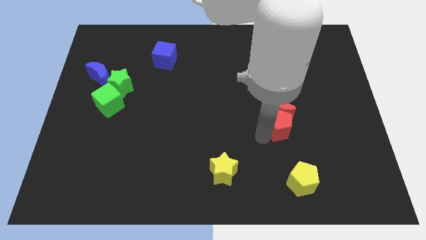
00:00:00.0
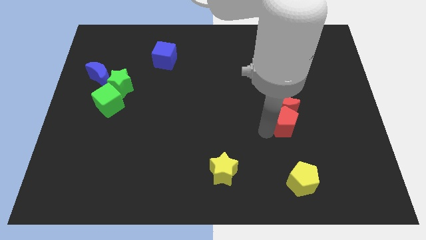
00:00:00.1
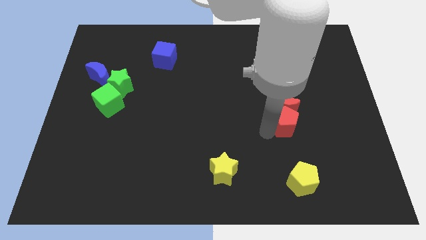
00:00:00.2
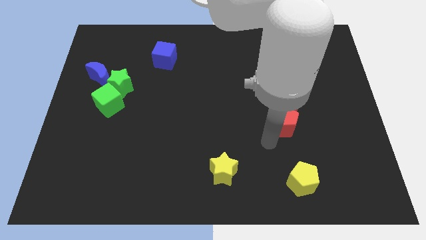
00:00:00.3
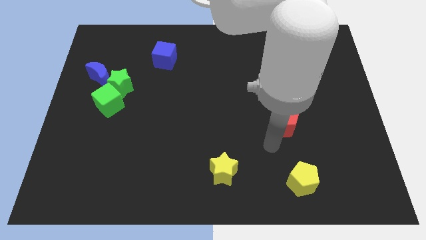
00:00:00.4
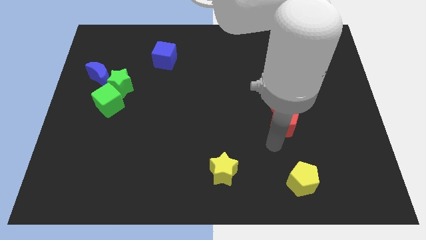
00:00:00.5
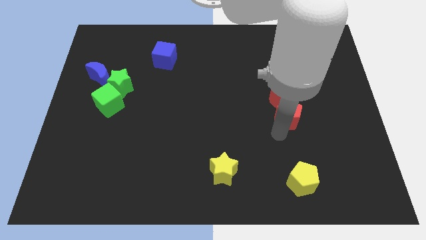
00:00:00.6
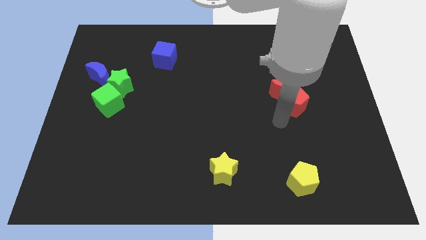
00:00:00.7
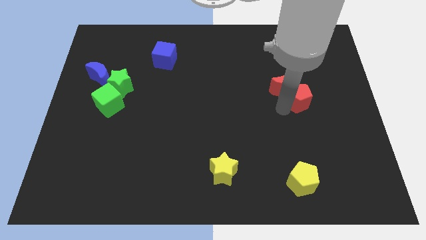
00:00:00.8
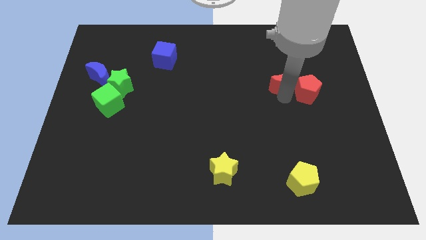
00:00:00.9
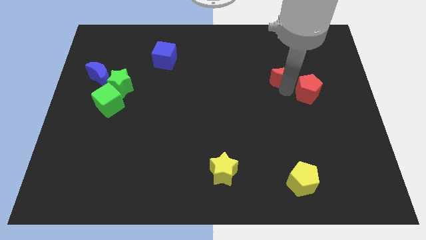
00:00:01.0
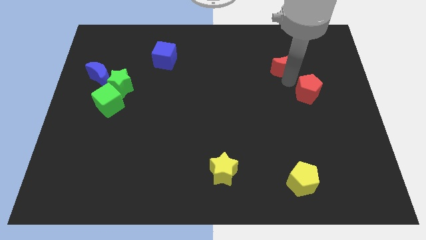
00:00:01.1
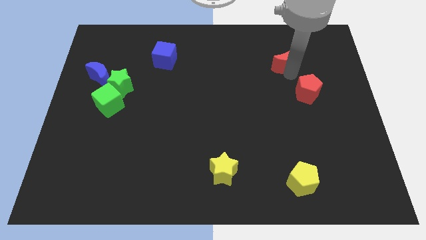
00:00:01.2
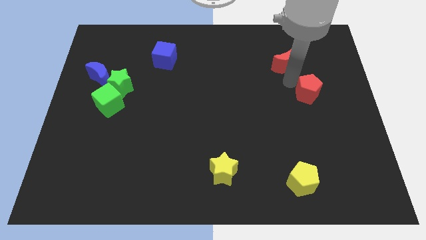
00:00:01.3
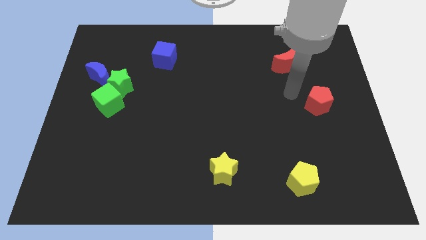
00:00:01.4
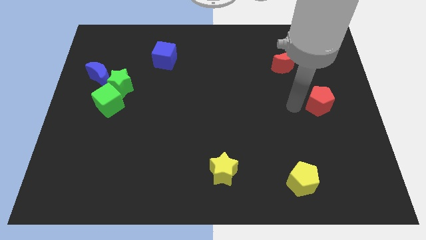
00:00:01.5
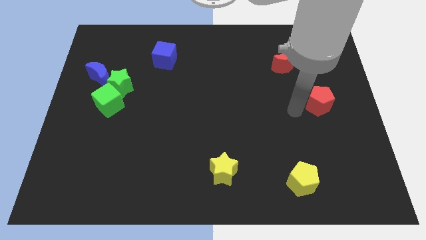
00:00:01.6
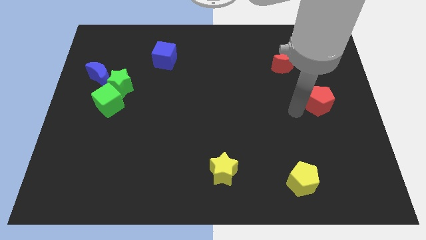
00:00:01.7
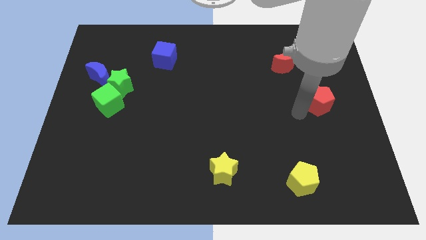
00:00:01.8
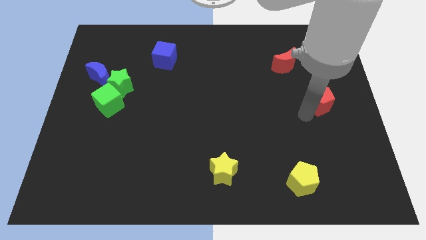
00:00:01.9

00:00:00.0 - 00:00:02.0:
separate the red blocks

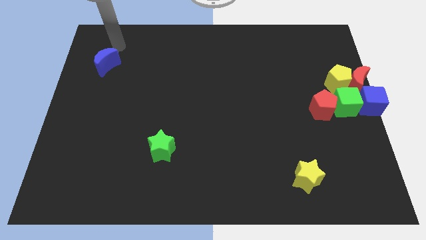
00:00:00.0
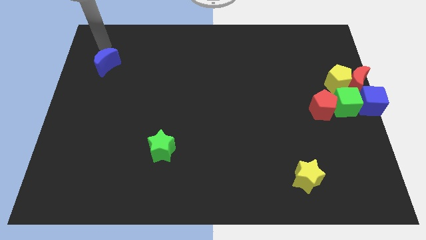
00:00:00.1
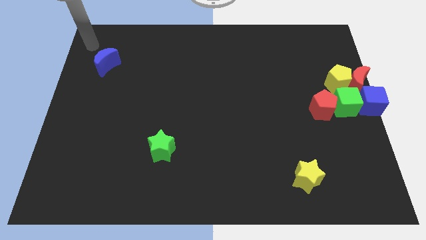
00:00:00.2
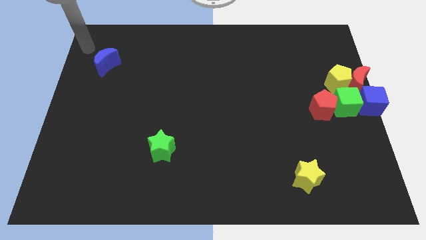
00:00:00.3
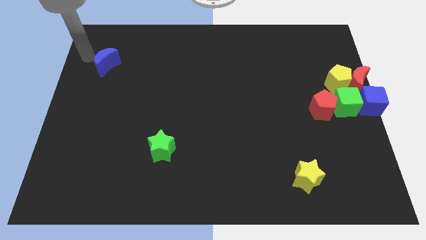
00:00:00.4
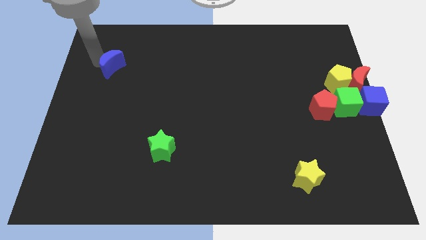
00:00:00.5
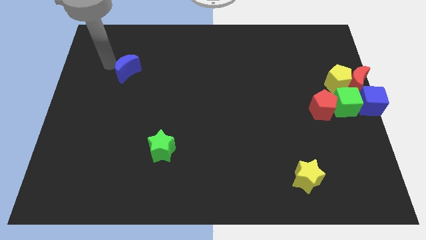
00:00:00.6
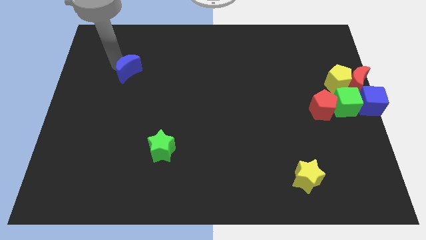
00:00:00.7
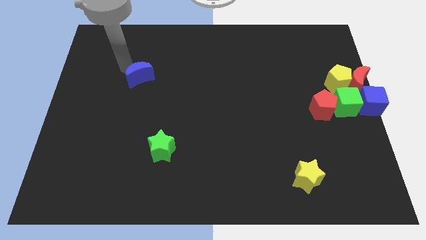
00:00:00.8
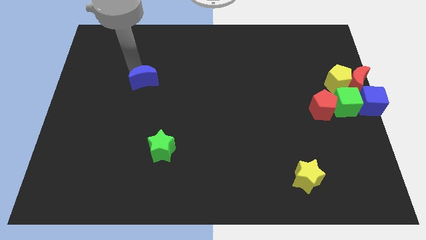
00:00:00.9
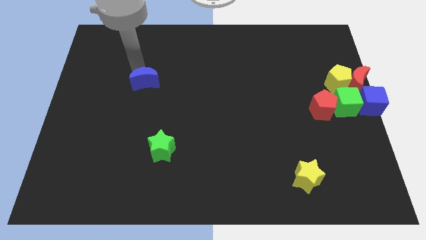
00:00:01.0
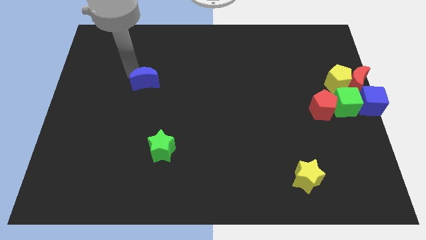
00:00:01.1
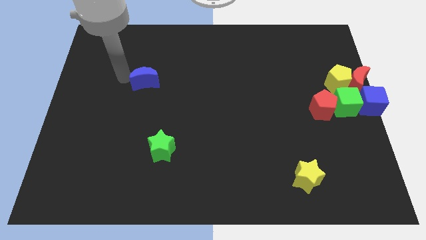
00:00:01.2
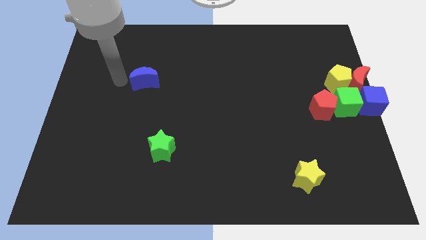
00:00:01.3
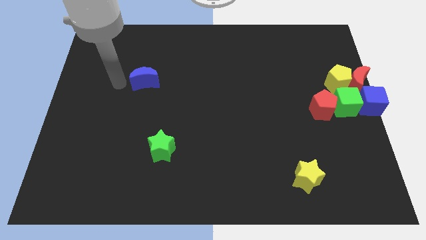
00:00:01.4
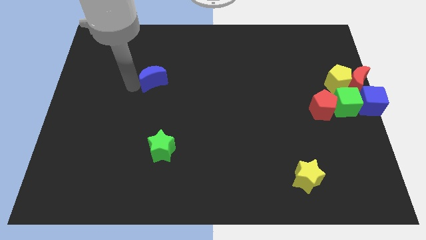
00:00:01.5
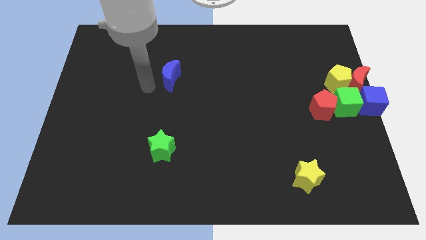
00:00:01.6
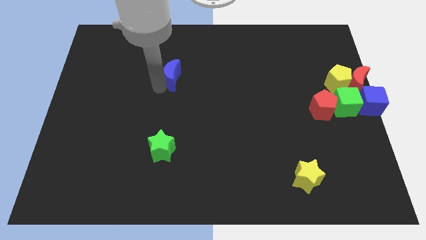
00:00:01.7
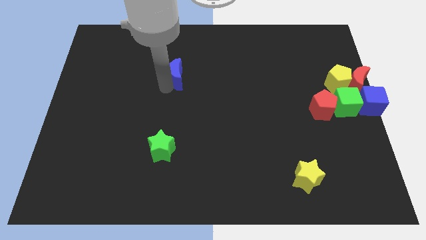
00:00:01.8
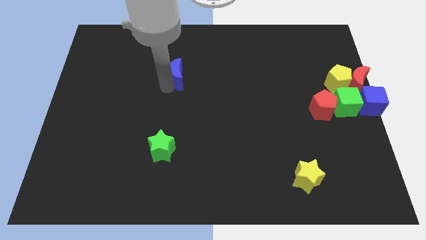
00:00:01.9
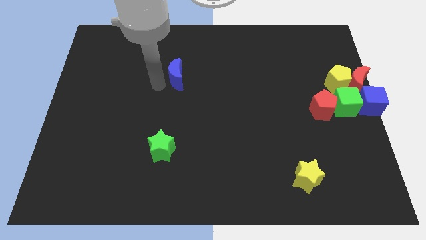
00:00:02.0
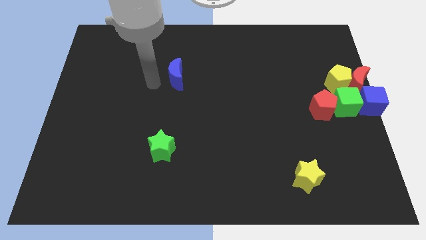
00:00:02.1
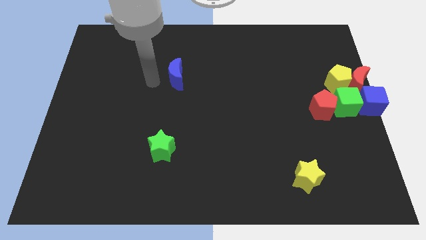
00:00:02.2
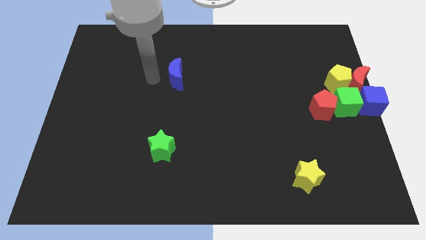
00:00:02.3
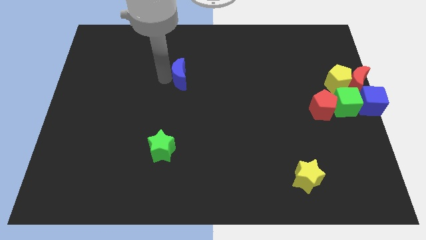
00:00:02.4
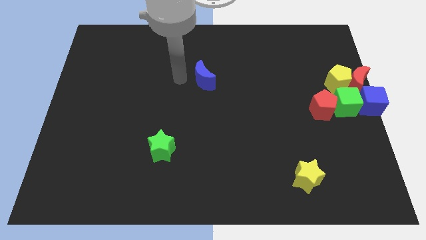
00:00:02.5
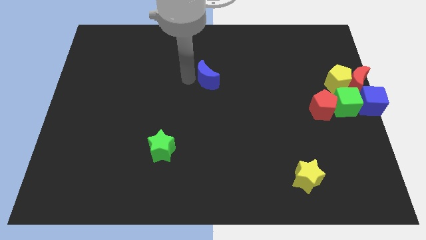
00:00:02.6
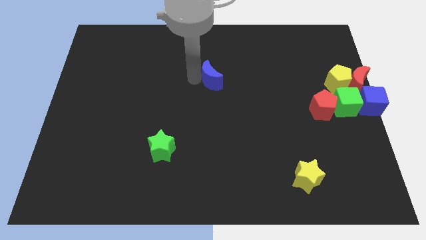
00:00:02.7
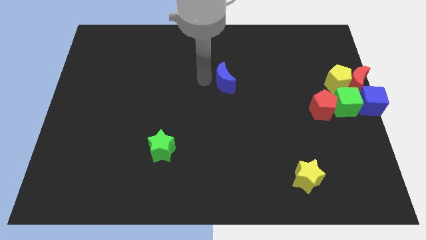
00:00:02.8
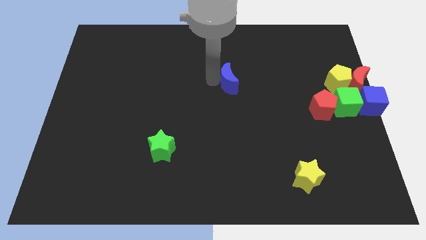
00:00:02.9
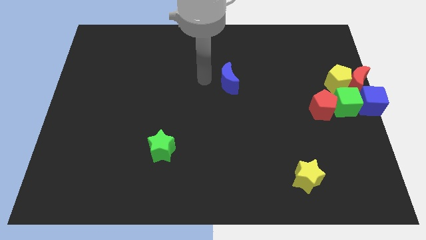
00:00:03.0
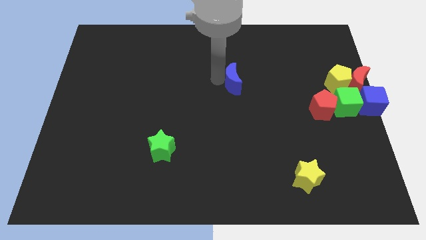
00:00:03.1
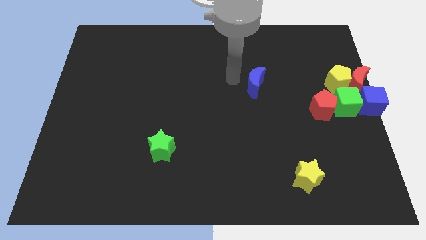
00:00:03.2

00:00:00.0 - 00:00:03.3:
slide blue moon towards right

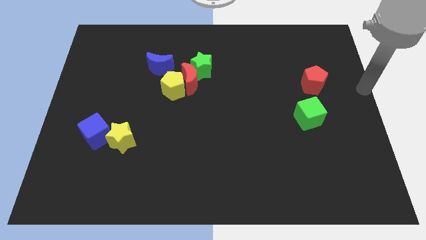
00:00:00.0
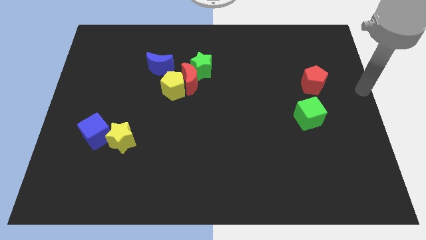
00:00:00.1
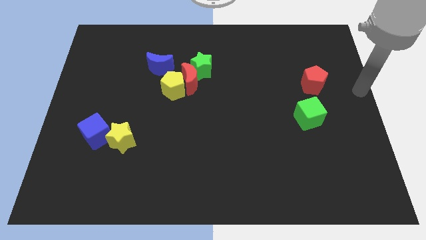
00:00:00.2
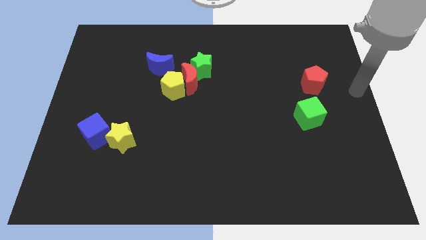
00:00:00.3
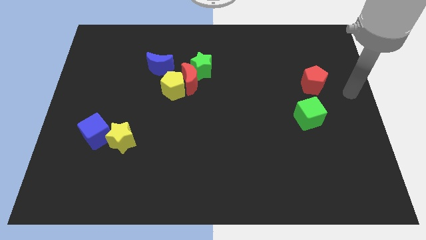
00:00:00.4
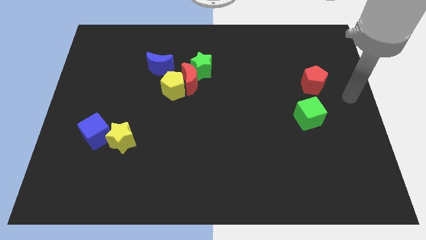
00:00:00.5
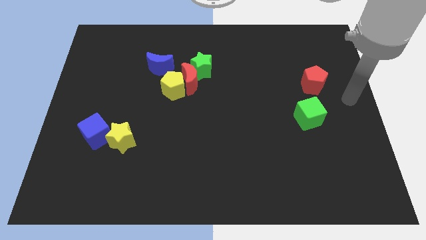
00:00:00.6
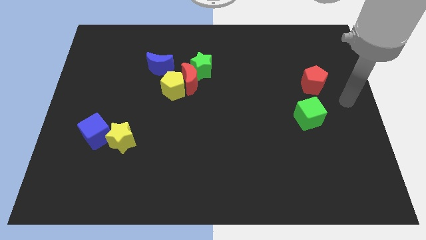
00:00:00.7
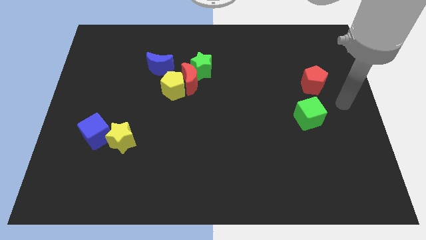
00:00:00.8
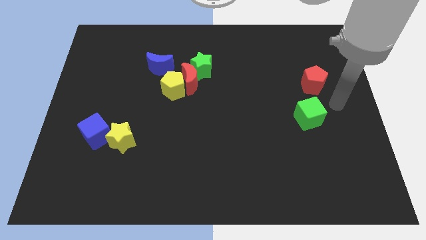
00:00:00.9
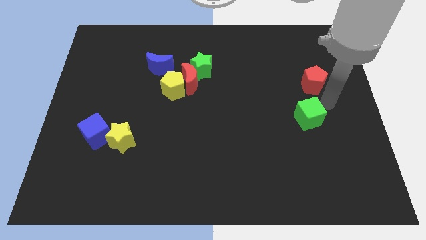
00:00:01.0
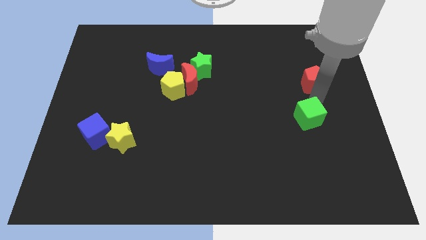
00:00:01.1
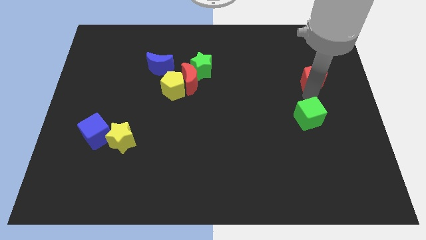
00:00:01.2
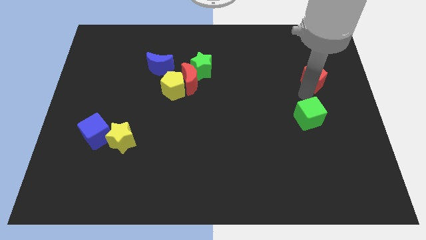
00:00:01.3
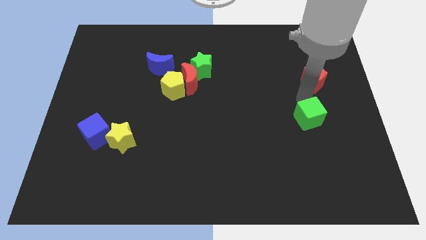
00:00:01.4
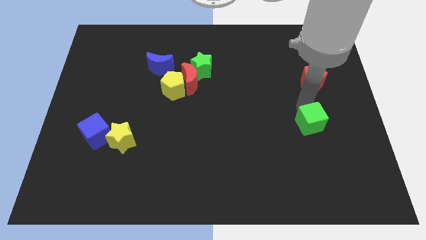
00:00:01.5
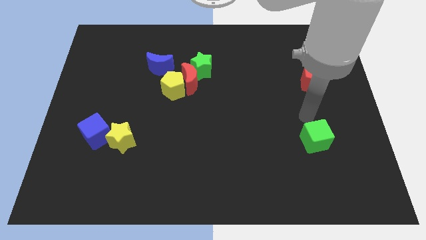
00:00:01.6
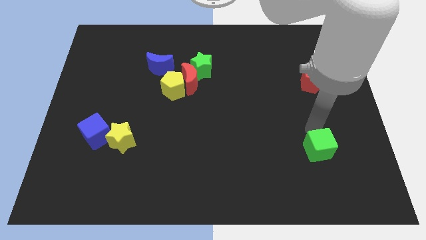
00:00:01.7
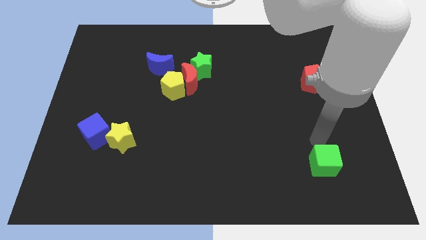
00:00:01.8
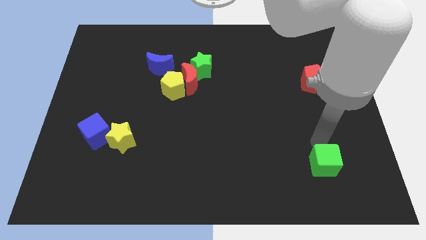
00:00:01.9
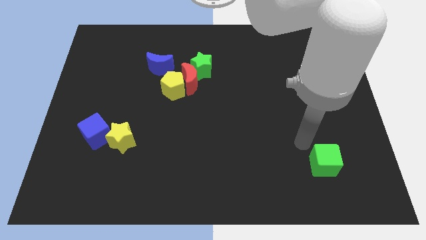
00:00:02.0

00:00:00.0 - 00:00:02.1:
move the green cube vertical to the bottom of the red pentagon

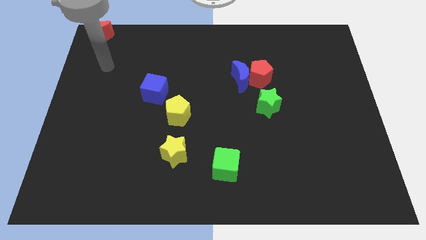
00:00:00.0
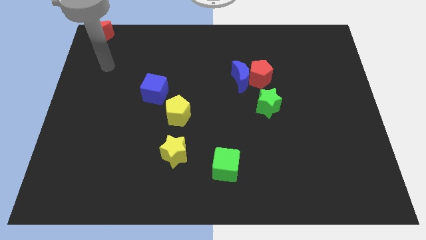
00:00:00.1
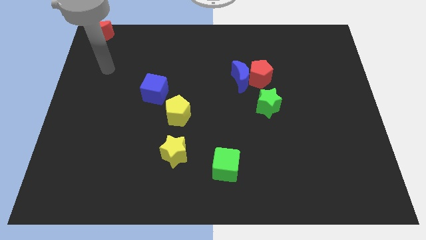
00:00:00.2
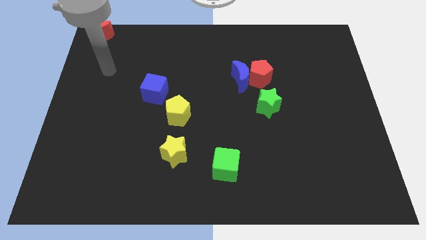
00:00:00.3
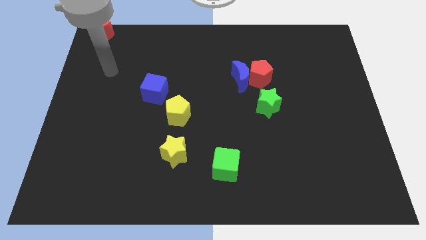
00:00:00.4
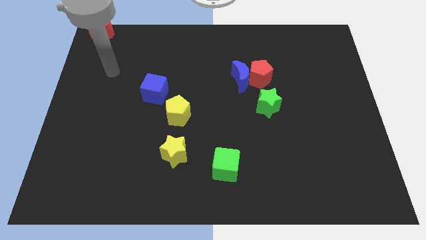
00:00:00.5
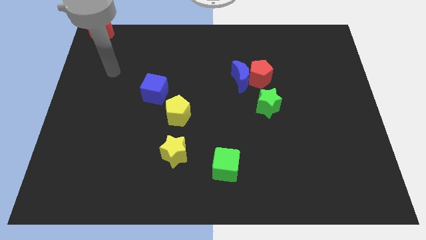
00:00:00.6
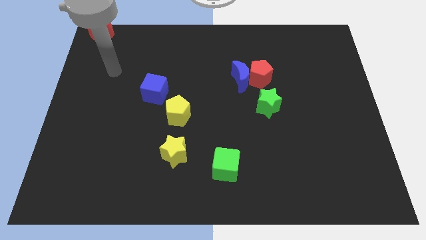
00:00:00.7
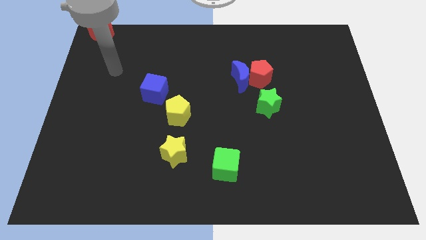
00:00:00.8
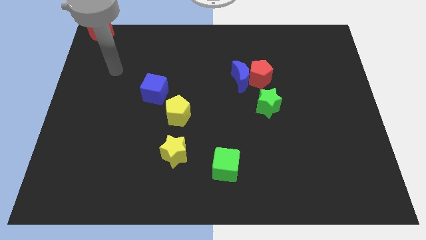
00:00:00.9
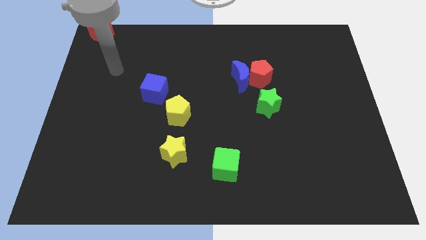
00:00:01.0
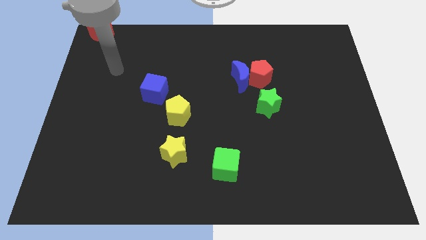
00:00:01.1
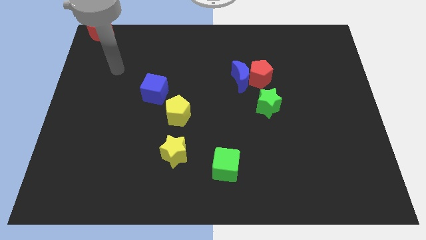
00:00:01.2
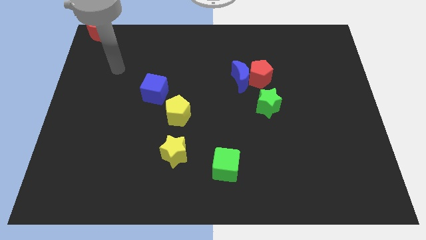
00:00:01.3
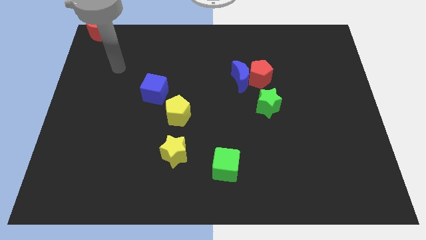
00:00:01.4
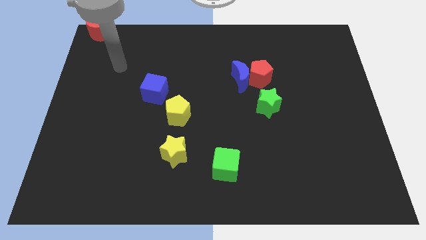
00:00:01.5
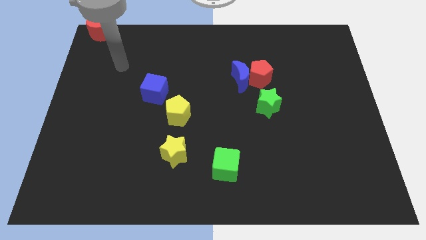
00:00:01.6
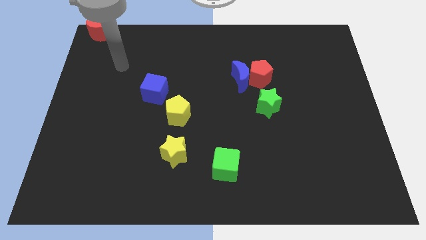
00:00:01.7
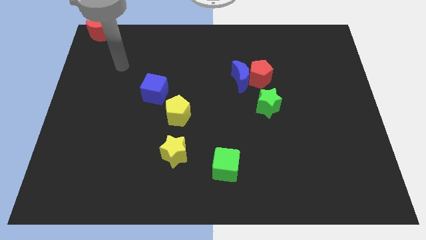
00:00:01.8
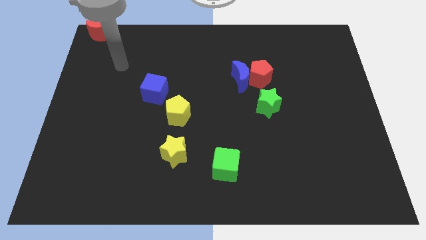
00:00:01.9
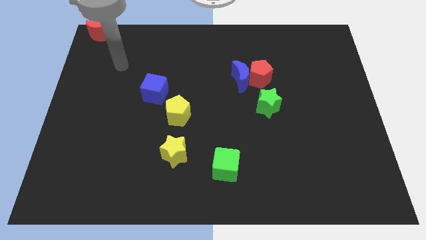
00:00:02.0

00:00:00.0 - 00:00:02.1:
move your arm around on the board
